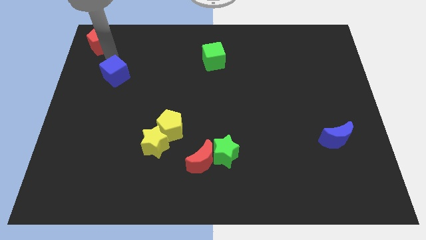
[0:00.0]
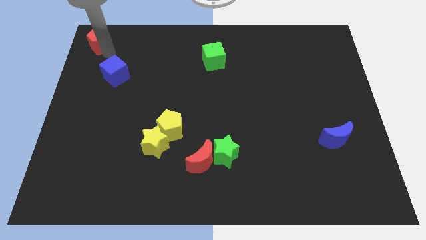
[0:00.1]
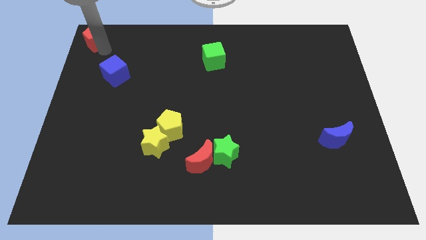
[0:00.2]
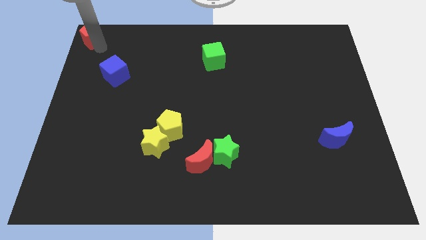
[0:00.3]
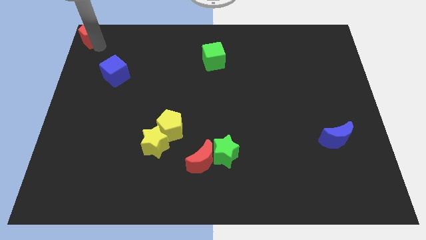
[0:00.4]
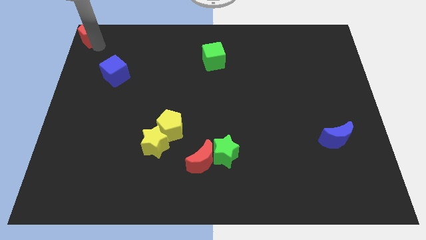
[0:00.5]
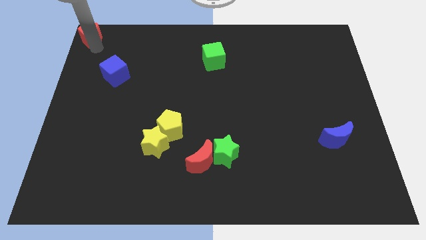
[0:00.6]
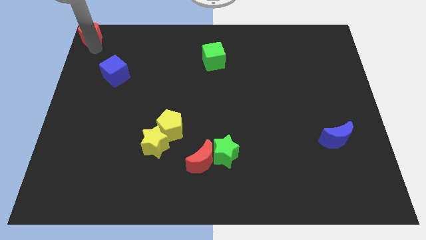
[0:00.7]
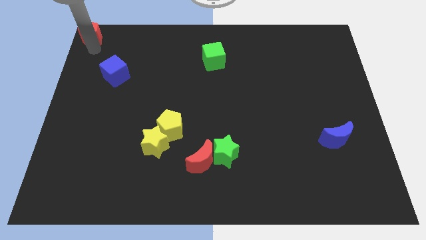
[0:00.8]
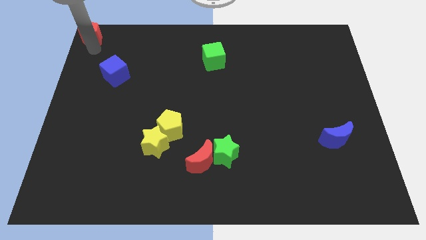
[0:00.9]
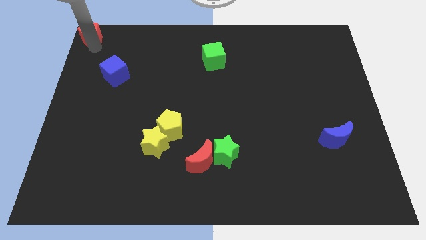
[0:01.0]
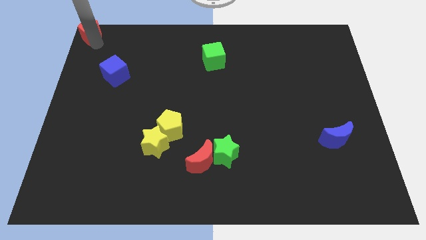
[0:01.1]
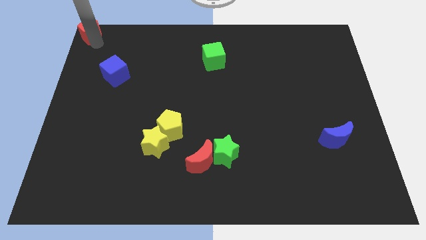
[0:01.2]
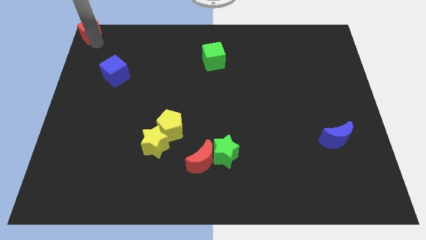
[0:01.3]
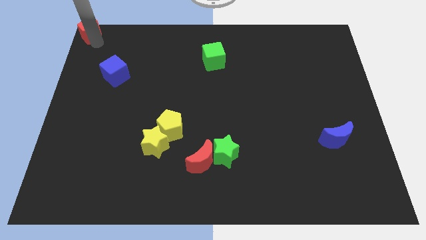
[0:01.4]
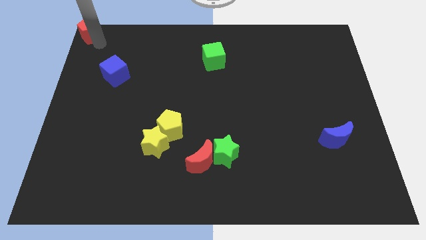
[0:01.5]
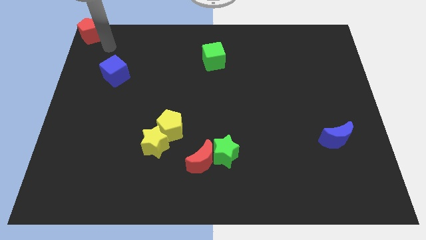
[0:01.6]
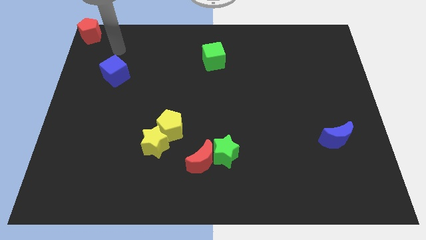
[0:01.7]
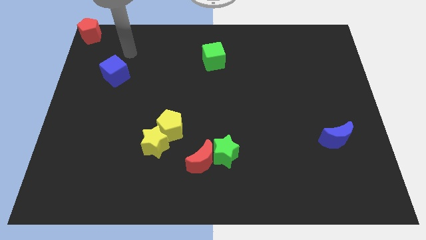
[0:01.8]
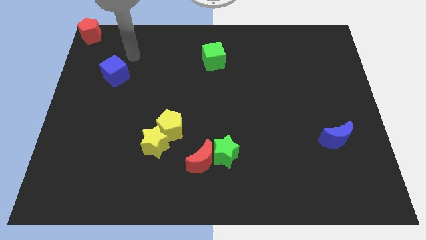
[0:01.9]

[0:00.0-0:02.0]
push the red pentagon to the top left corner

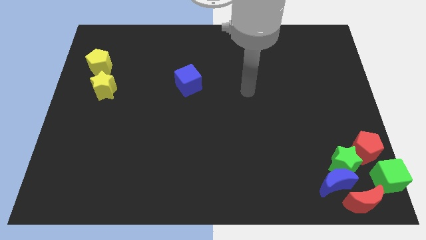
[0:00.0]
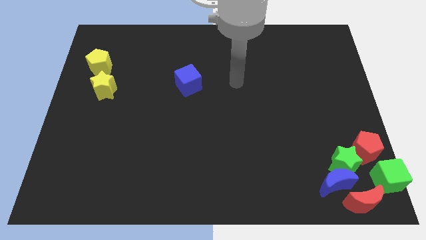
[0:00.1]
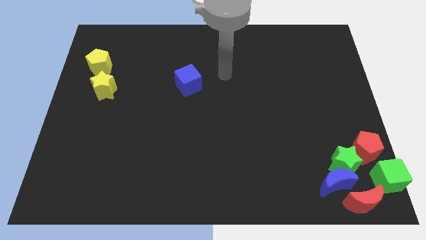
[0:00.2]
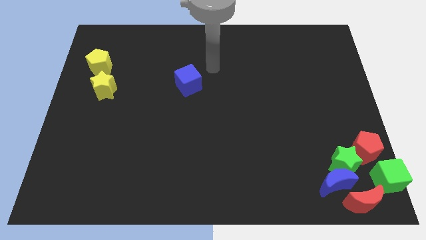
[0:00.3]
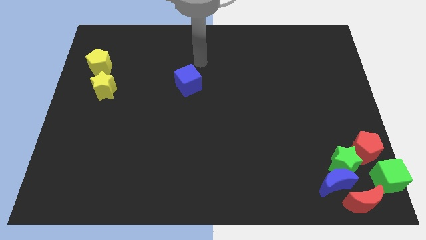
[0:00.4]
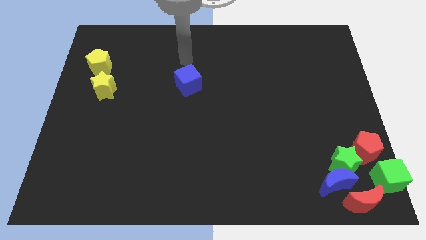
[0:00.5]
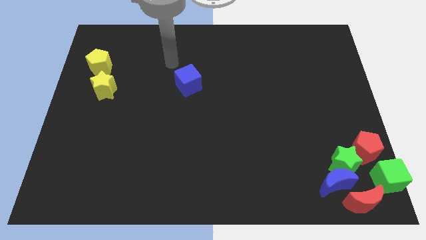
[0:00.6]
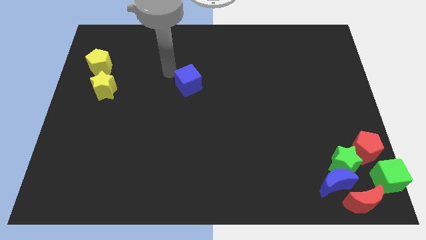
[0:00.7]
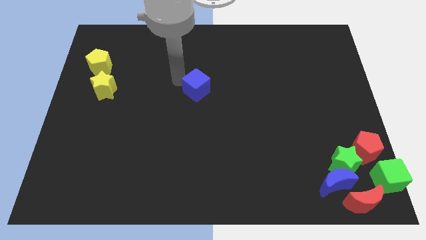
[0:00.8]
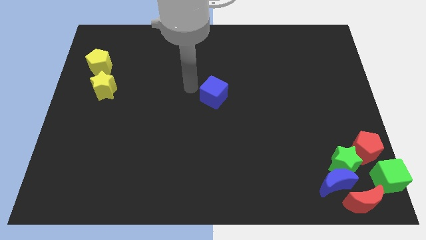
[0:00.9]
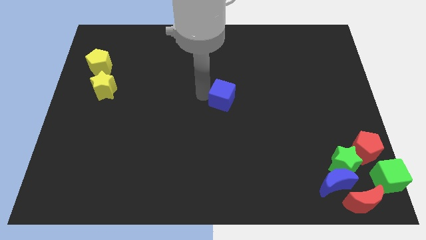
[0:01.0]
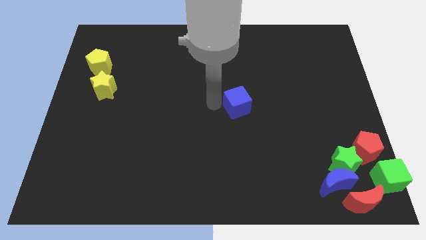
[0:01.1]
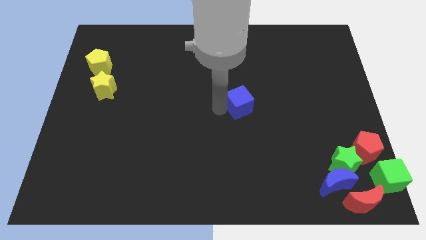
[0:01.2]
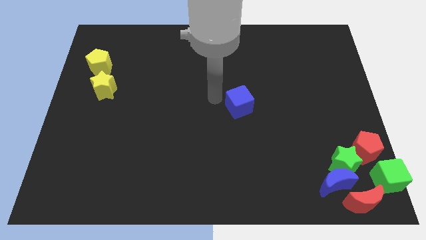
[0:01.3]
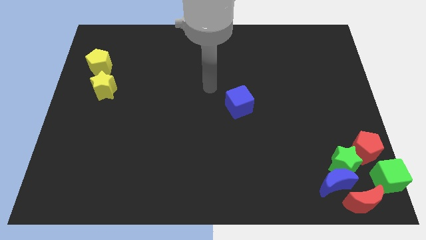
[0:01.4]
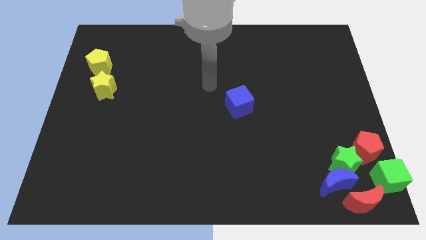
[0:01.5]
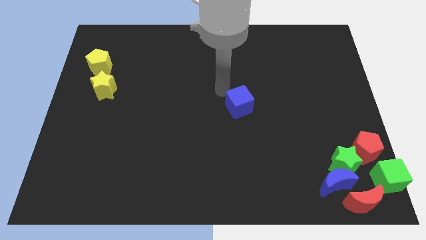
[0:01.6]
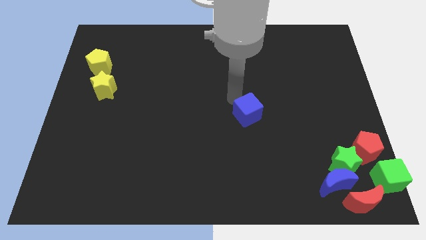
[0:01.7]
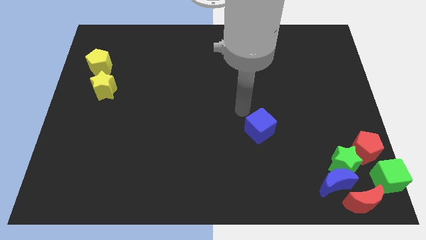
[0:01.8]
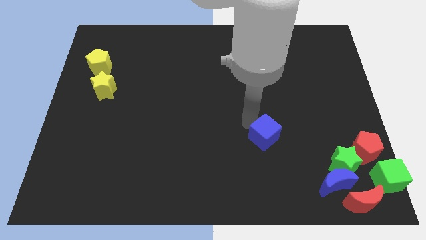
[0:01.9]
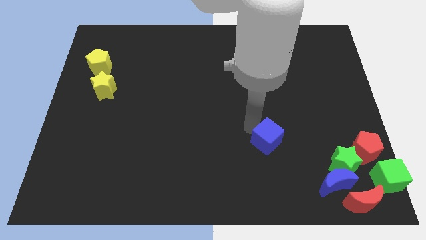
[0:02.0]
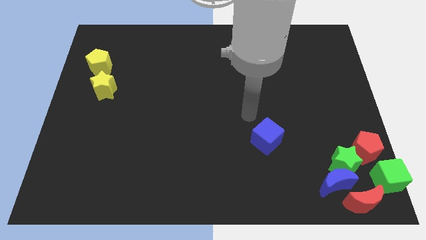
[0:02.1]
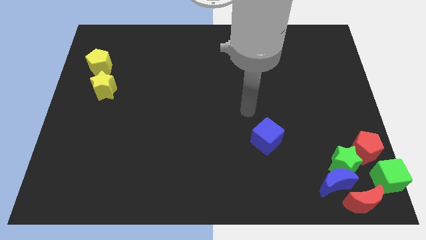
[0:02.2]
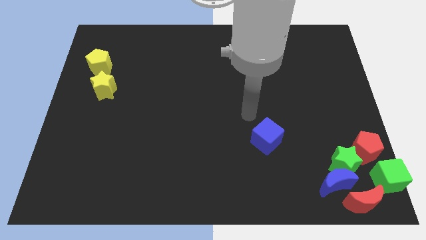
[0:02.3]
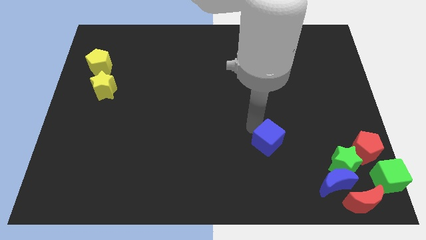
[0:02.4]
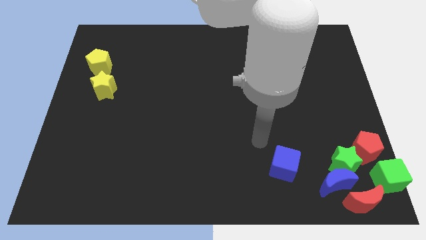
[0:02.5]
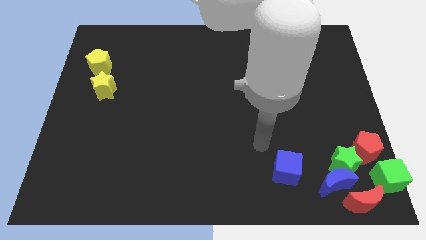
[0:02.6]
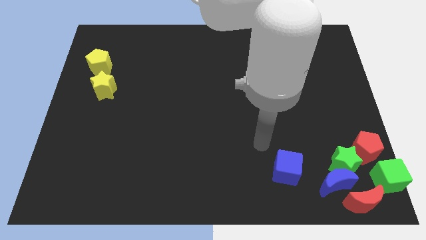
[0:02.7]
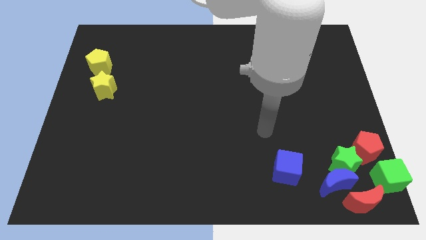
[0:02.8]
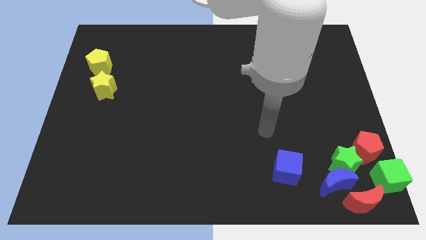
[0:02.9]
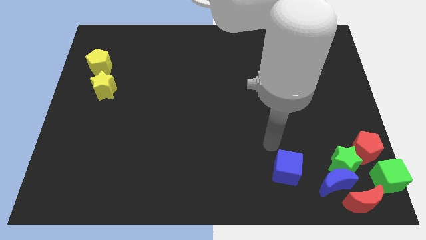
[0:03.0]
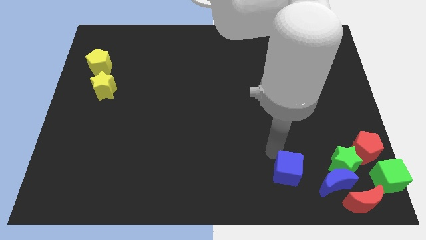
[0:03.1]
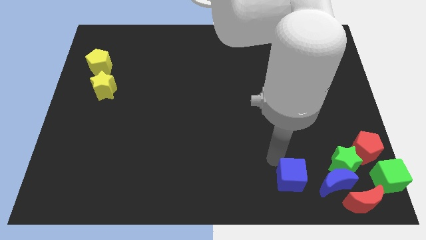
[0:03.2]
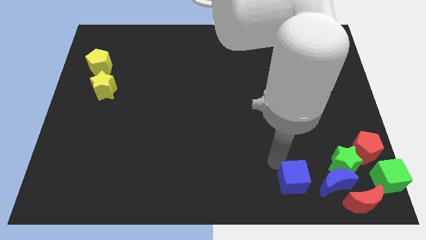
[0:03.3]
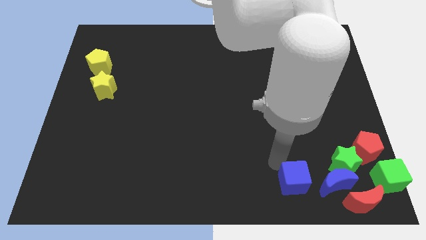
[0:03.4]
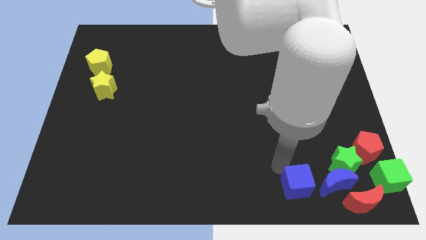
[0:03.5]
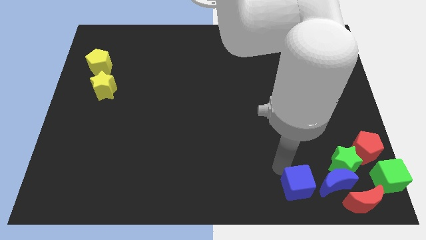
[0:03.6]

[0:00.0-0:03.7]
move the blue cube towards the bottom right of the board

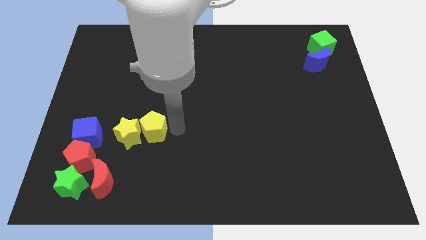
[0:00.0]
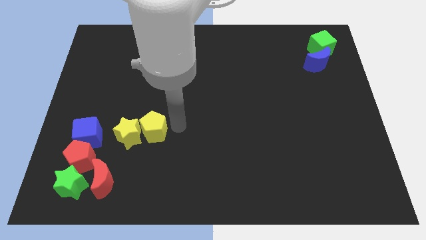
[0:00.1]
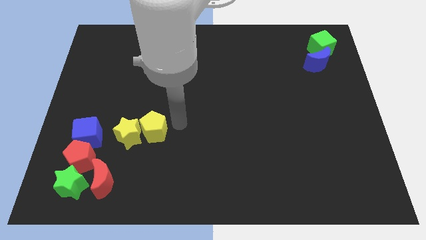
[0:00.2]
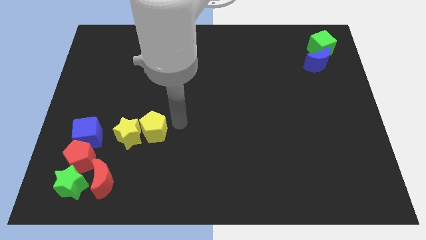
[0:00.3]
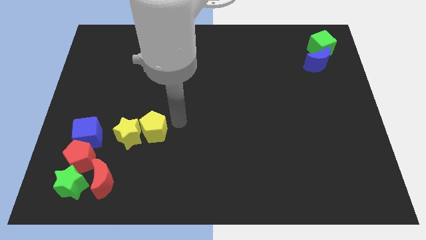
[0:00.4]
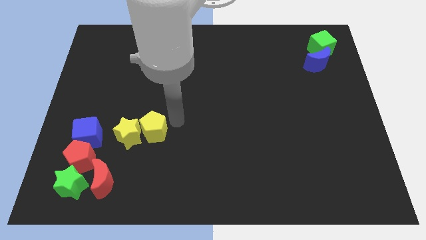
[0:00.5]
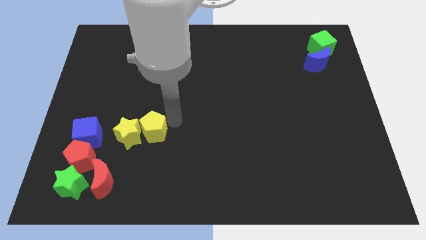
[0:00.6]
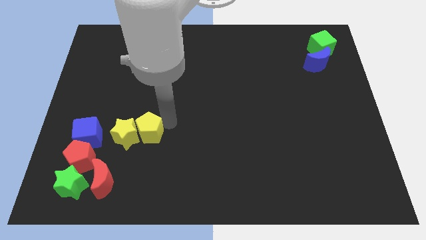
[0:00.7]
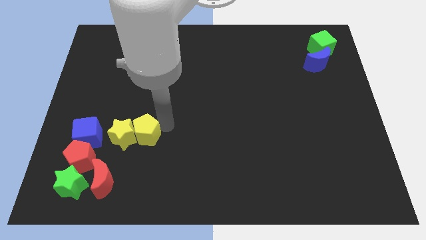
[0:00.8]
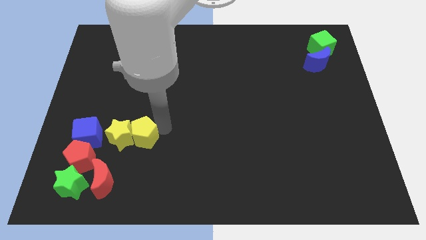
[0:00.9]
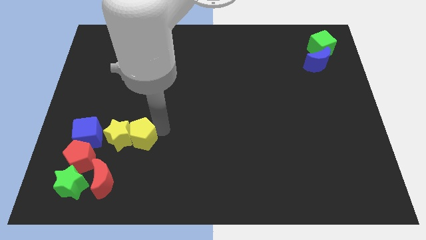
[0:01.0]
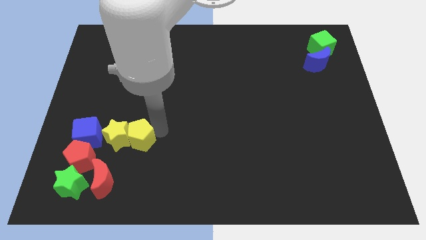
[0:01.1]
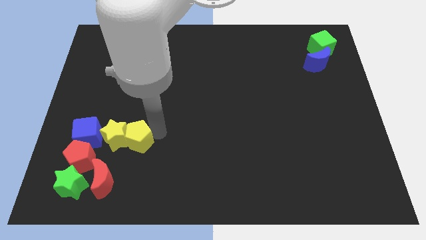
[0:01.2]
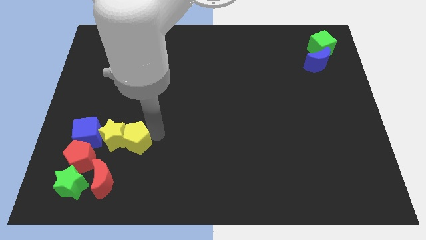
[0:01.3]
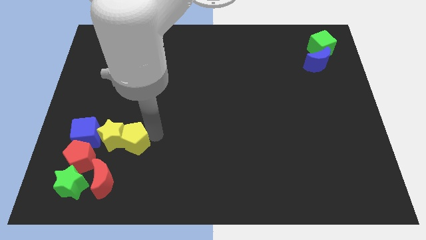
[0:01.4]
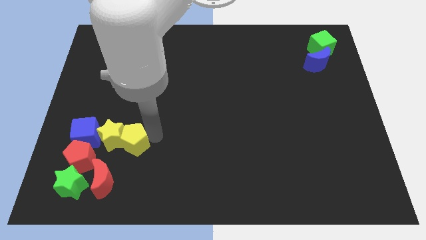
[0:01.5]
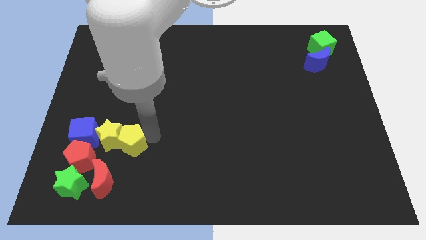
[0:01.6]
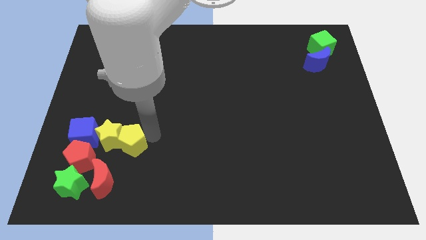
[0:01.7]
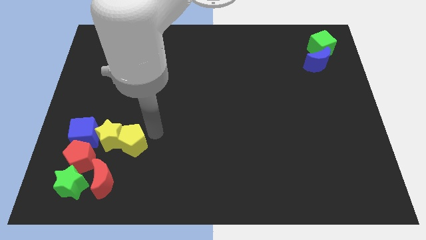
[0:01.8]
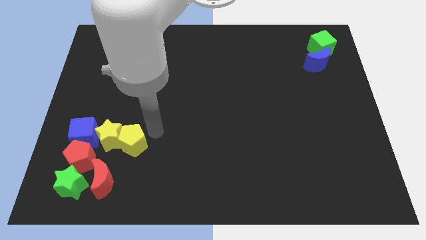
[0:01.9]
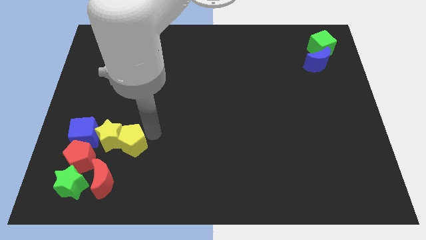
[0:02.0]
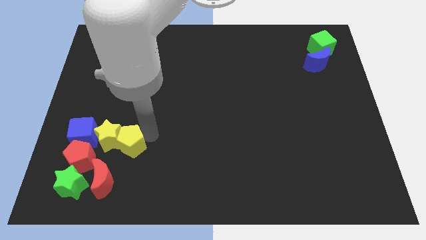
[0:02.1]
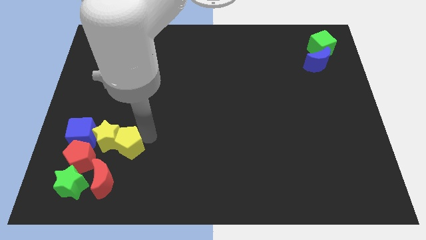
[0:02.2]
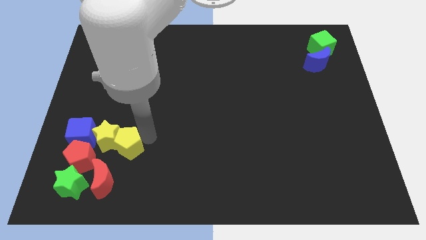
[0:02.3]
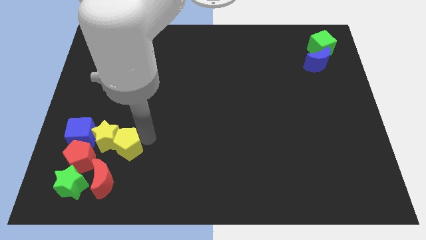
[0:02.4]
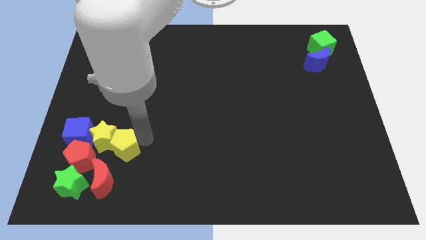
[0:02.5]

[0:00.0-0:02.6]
push the yellow pentagon and yellow star into the blue cube

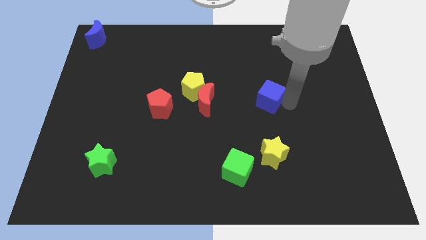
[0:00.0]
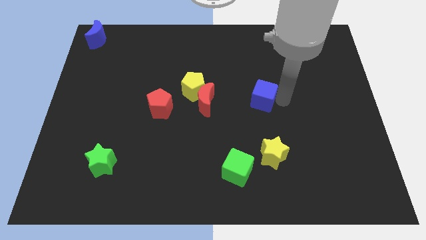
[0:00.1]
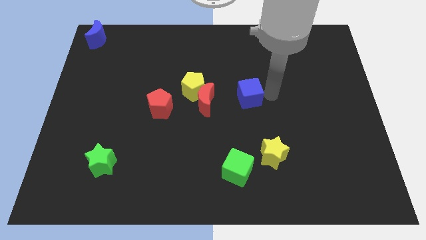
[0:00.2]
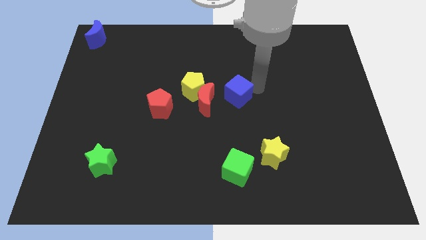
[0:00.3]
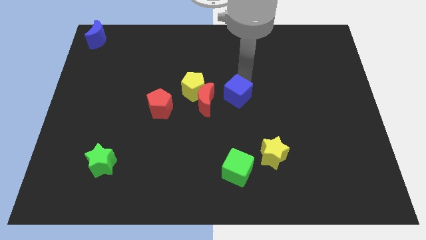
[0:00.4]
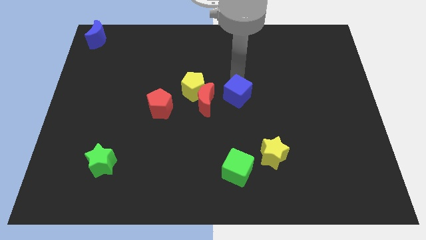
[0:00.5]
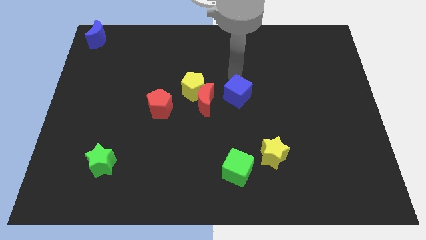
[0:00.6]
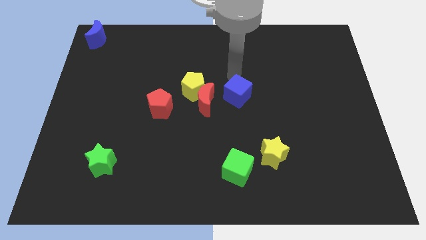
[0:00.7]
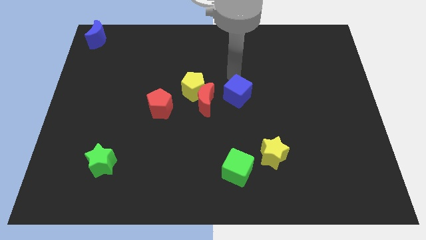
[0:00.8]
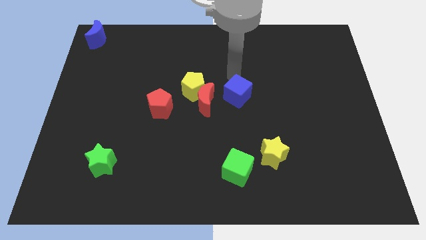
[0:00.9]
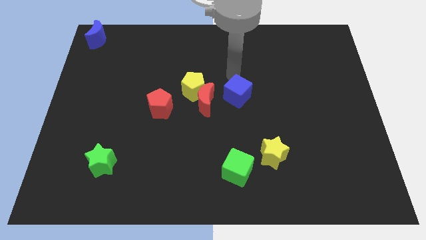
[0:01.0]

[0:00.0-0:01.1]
push blue cube towards red moon
